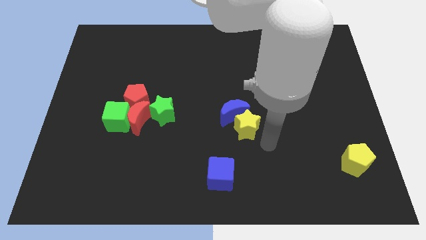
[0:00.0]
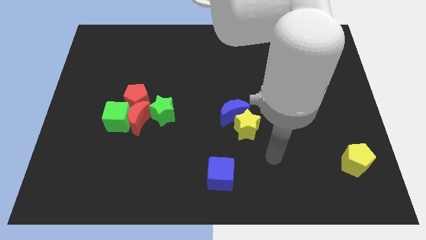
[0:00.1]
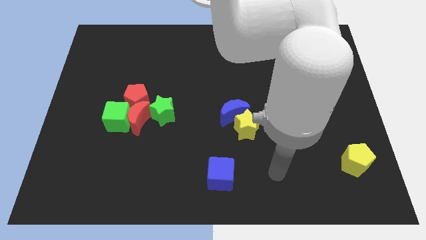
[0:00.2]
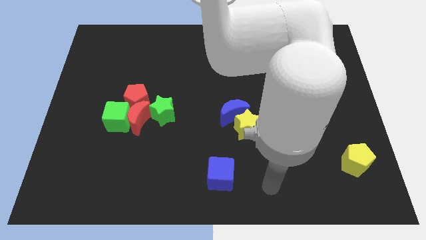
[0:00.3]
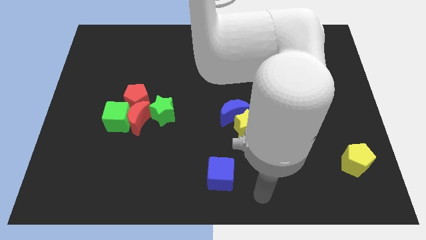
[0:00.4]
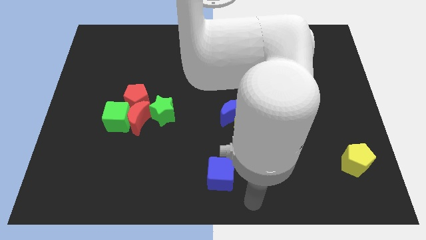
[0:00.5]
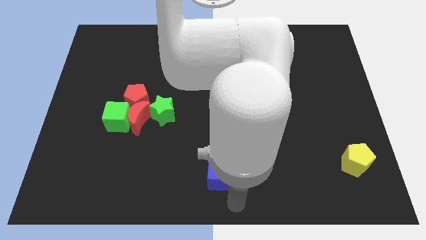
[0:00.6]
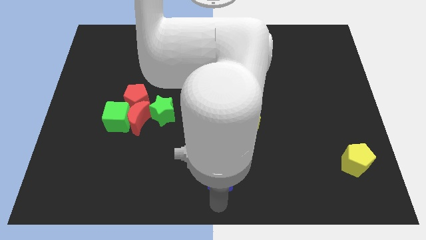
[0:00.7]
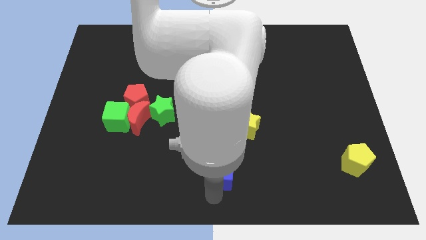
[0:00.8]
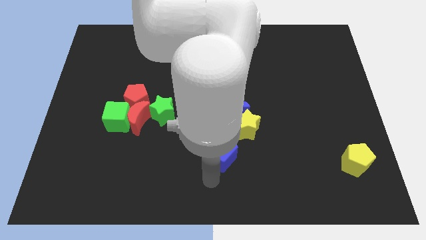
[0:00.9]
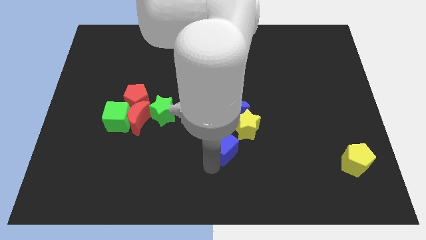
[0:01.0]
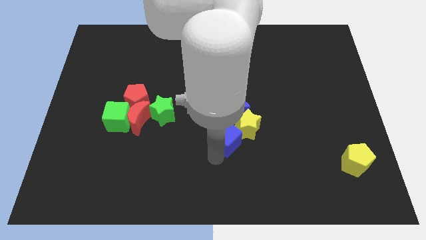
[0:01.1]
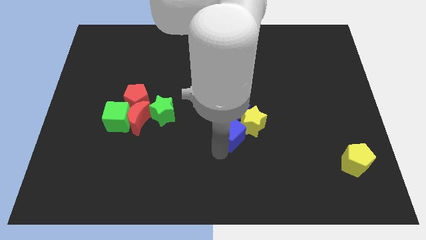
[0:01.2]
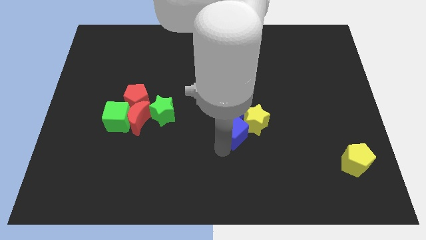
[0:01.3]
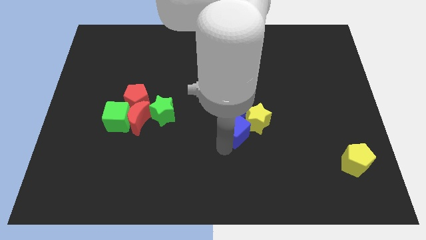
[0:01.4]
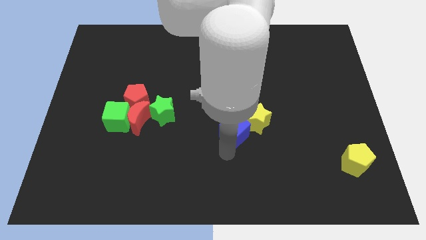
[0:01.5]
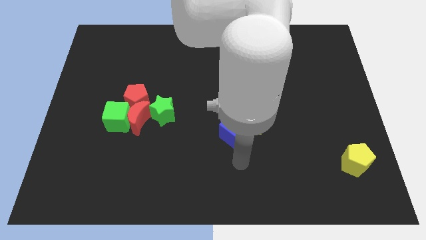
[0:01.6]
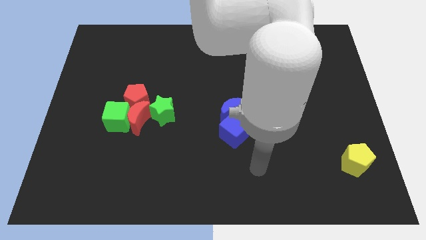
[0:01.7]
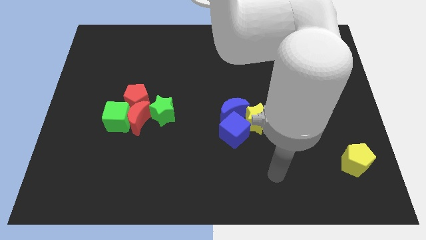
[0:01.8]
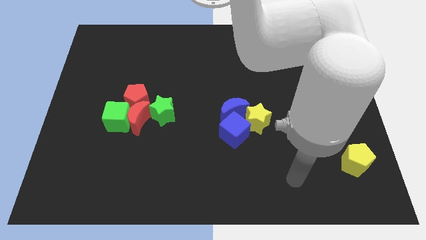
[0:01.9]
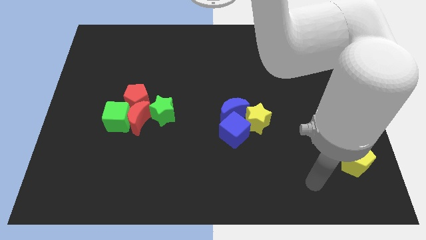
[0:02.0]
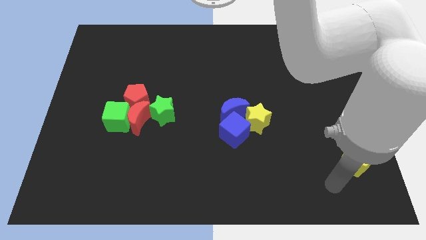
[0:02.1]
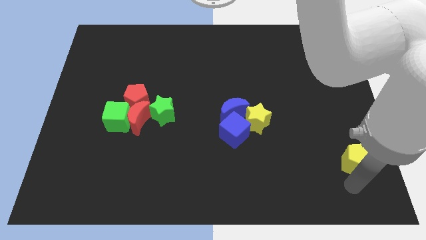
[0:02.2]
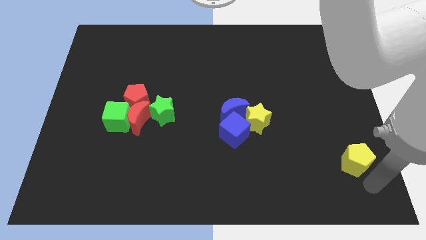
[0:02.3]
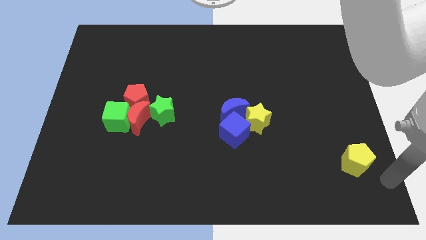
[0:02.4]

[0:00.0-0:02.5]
move the blue cube to the bottom left to the yellow star

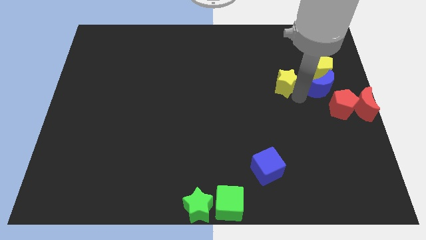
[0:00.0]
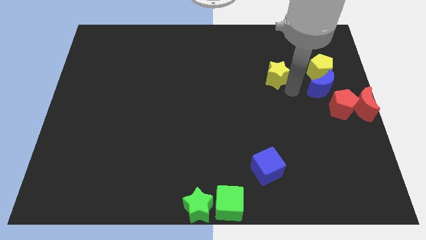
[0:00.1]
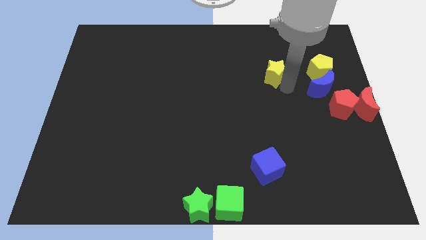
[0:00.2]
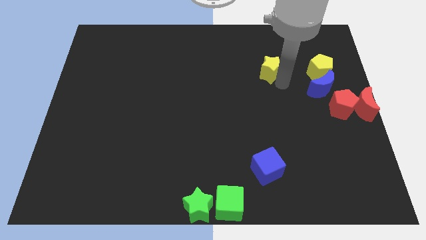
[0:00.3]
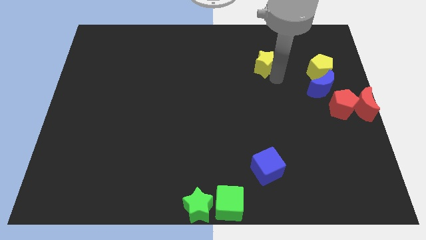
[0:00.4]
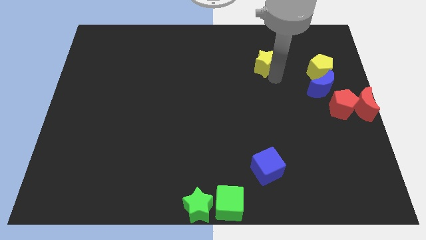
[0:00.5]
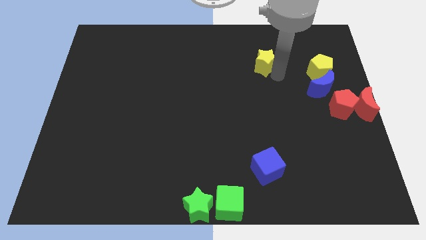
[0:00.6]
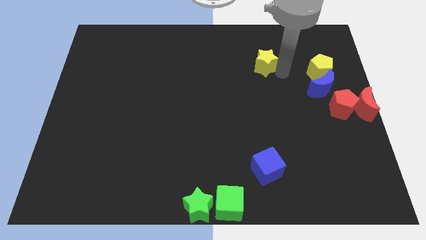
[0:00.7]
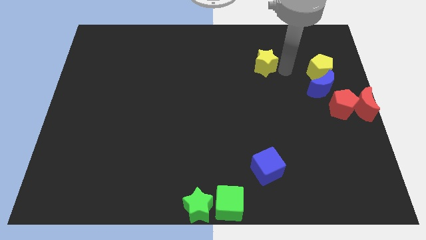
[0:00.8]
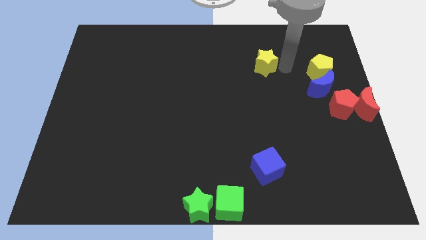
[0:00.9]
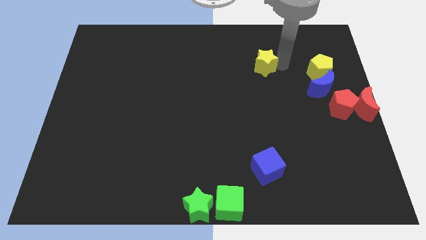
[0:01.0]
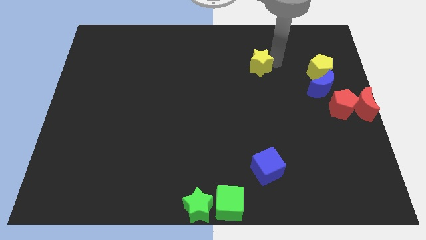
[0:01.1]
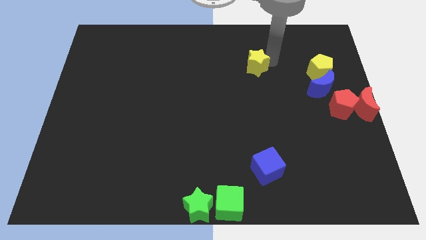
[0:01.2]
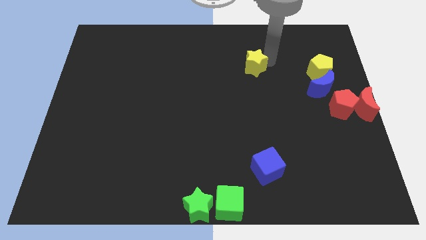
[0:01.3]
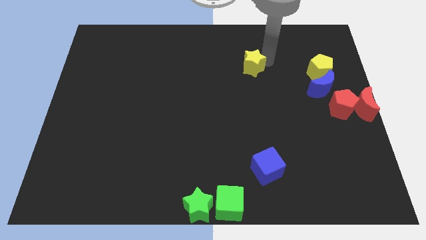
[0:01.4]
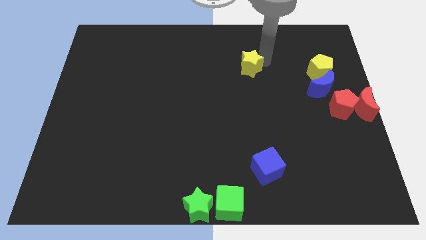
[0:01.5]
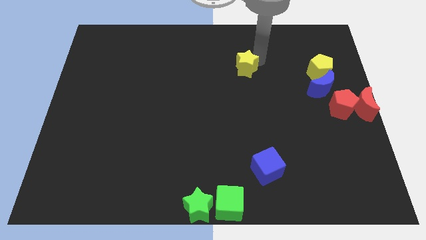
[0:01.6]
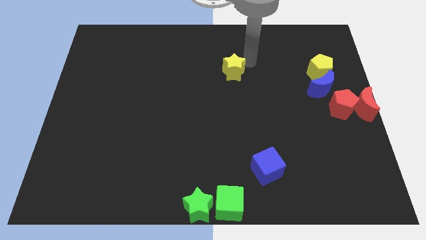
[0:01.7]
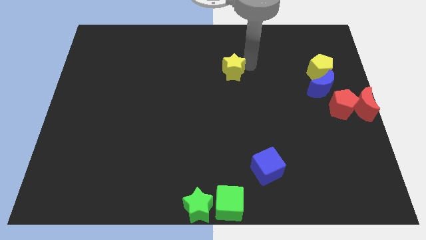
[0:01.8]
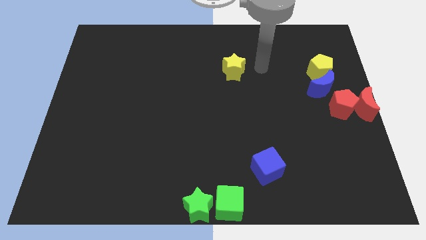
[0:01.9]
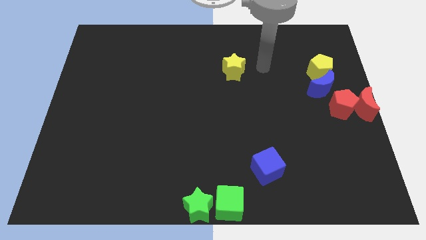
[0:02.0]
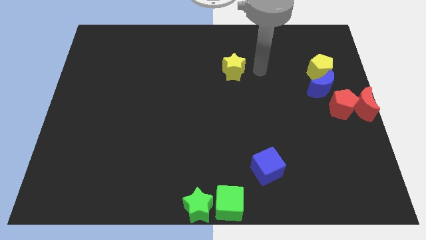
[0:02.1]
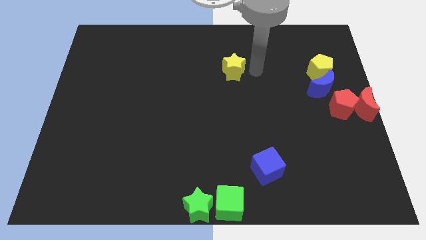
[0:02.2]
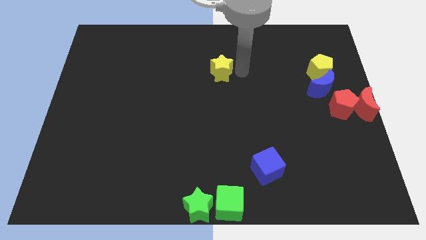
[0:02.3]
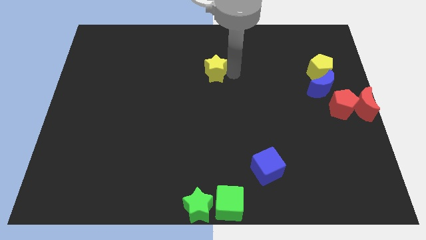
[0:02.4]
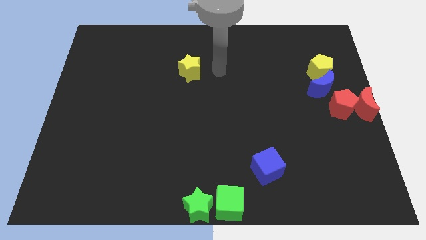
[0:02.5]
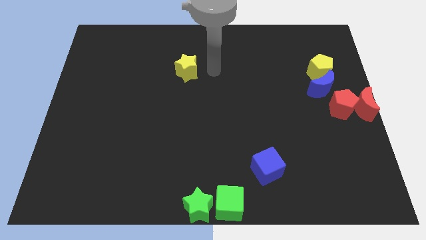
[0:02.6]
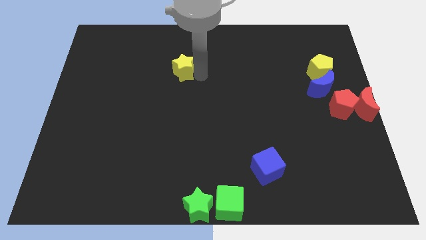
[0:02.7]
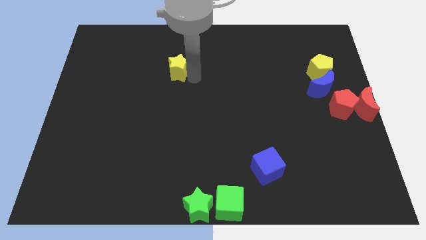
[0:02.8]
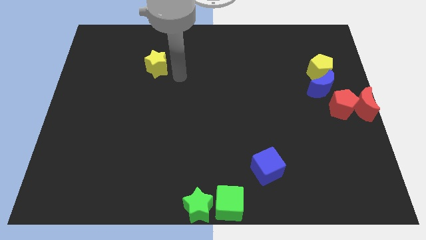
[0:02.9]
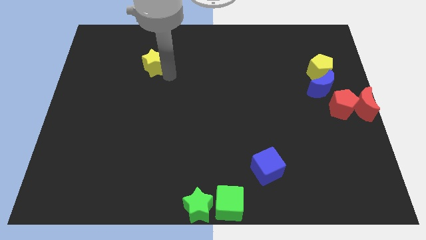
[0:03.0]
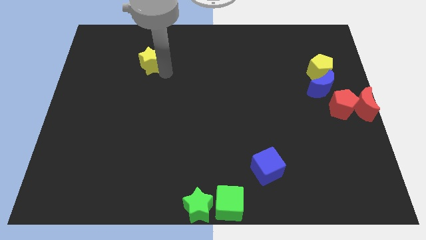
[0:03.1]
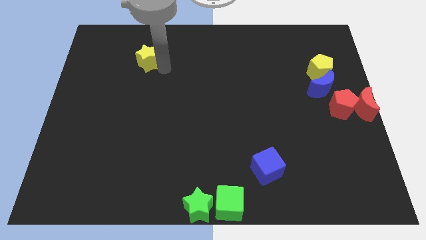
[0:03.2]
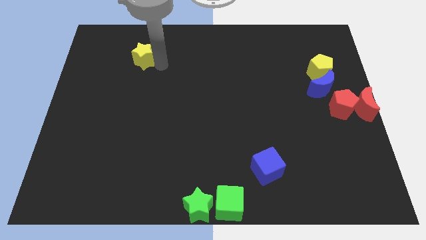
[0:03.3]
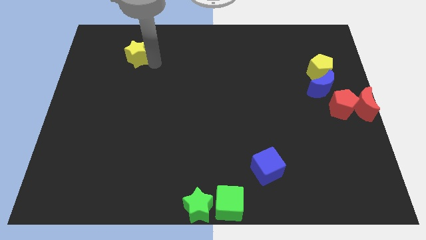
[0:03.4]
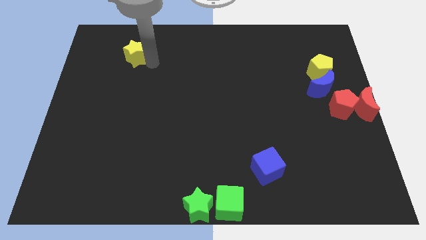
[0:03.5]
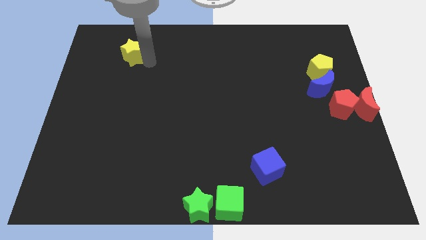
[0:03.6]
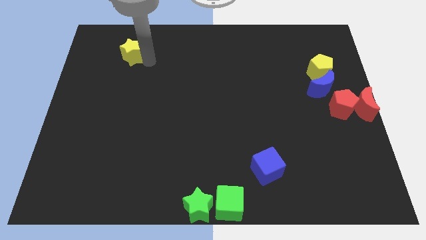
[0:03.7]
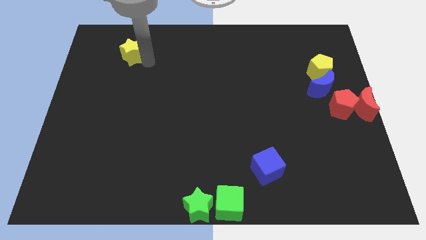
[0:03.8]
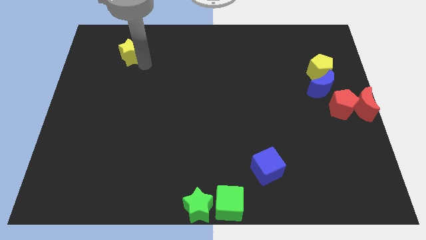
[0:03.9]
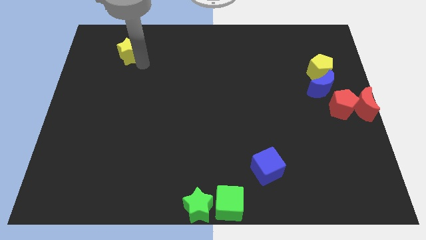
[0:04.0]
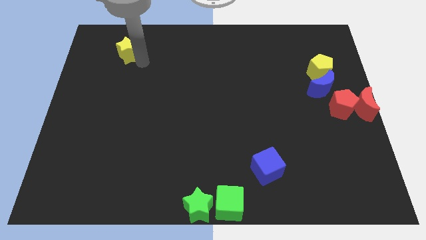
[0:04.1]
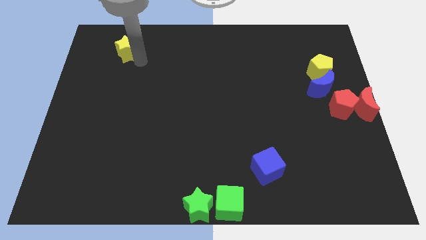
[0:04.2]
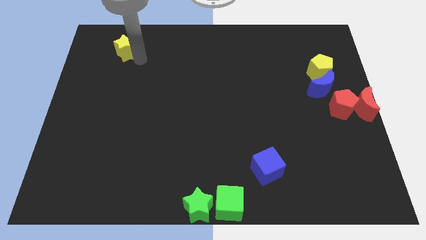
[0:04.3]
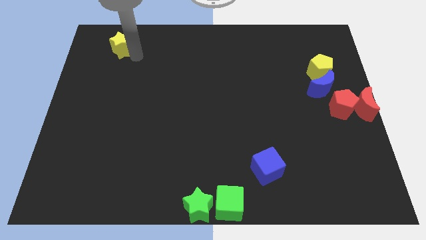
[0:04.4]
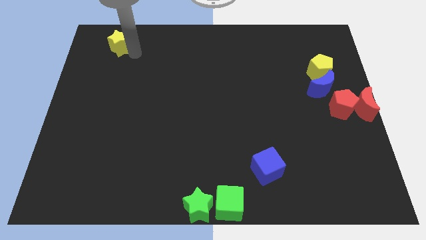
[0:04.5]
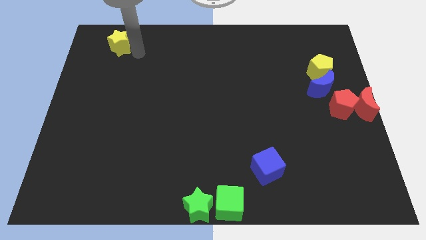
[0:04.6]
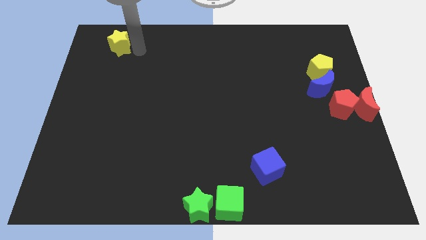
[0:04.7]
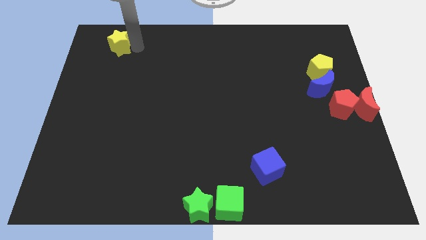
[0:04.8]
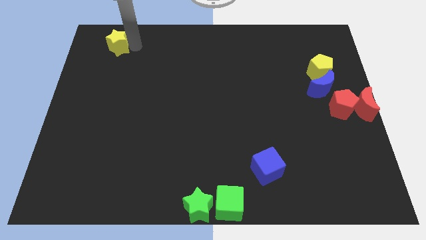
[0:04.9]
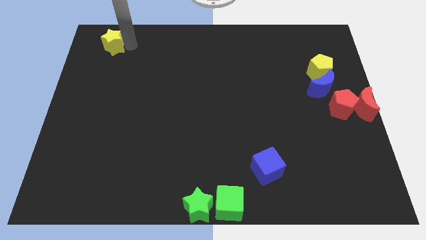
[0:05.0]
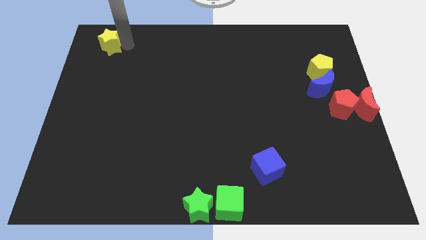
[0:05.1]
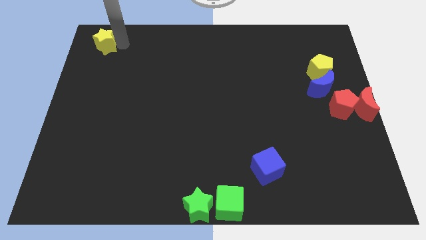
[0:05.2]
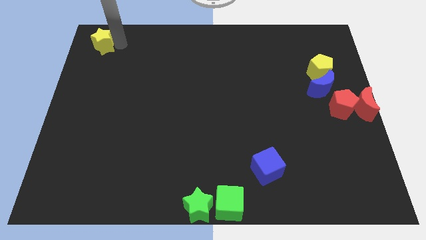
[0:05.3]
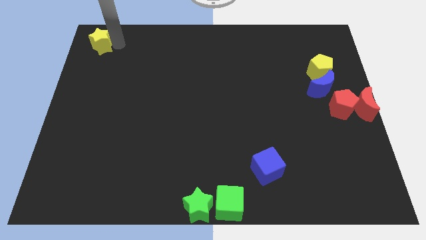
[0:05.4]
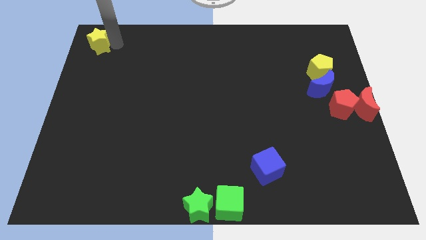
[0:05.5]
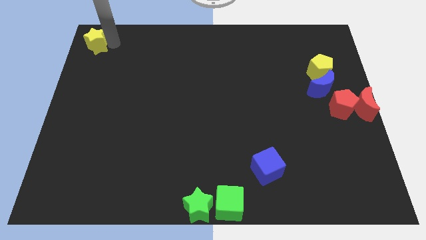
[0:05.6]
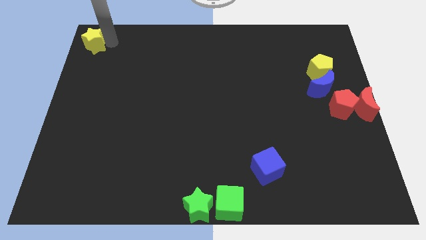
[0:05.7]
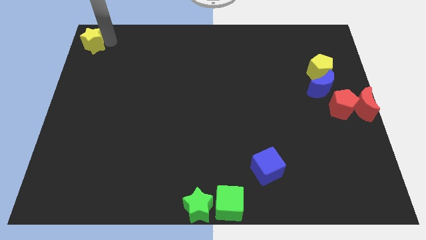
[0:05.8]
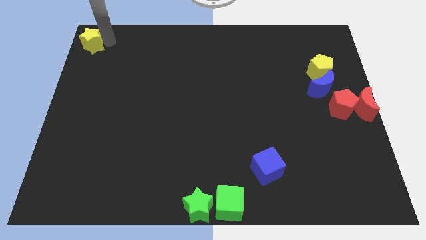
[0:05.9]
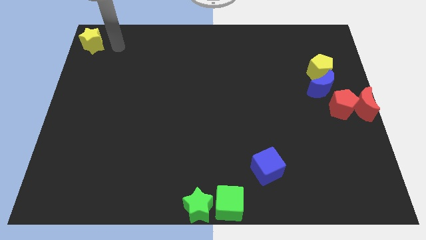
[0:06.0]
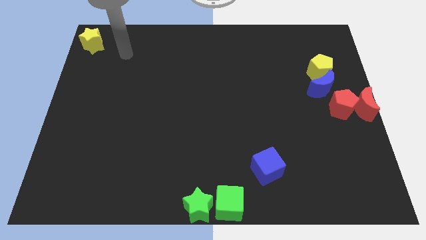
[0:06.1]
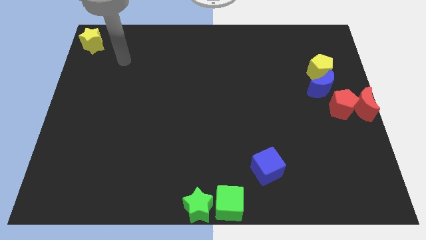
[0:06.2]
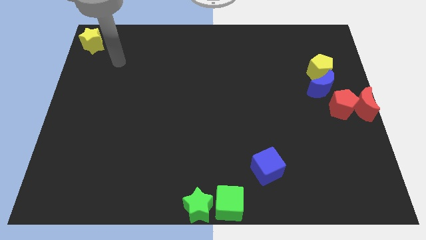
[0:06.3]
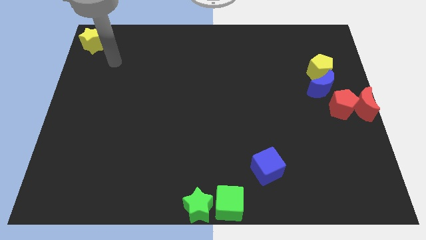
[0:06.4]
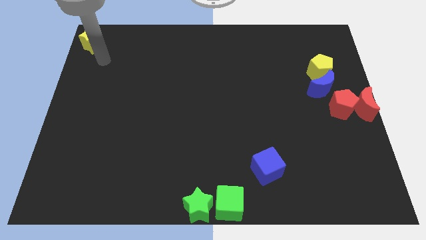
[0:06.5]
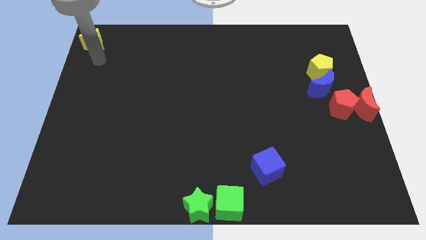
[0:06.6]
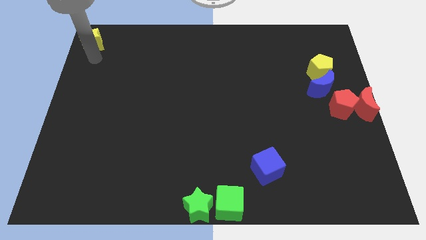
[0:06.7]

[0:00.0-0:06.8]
move yellow star away from the blue moon
